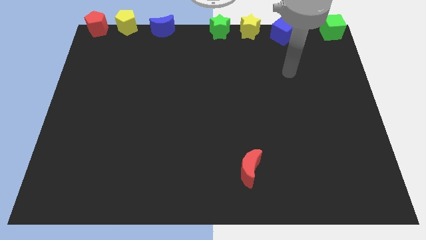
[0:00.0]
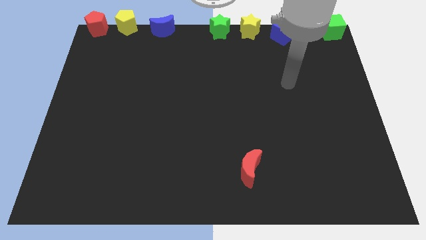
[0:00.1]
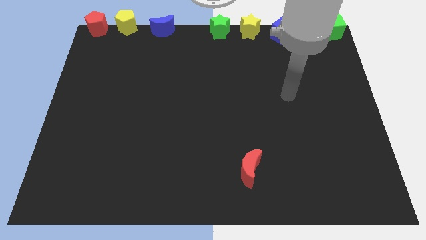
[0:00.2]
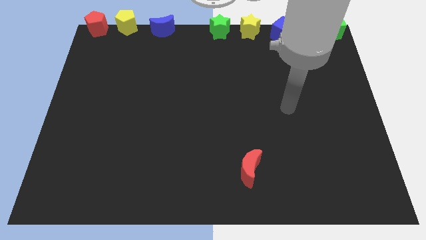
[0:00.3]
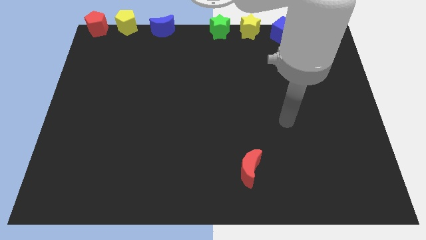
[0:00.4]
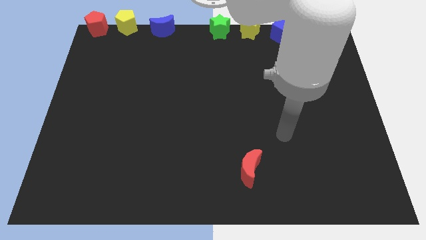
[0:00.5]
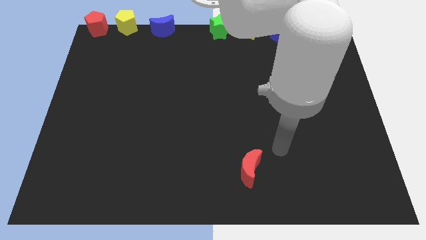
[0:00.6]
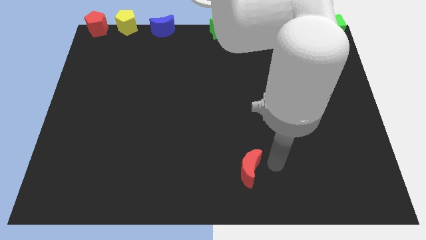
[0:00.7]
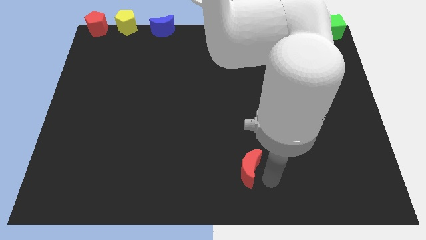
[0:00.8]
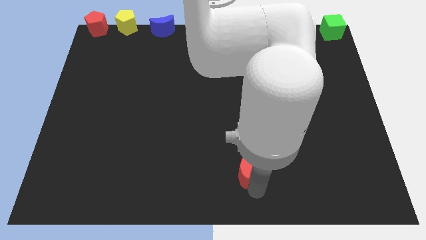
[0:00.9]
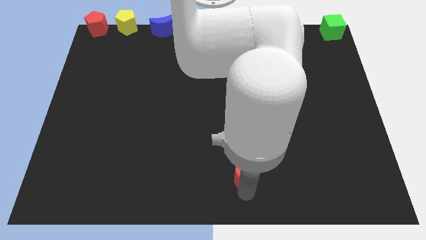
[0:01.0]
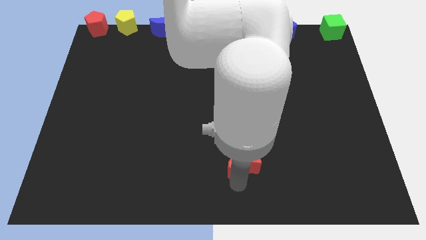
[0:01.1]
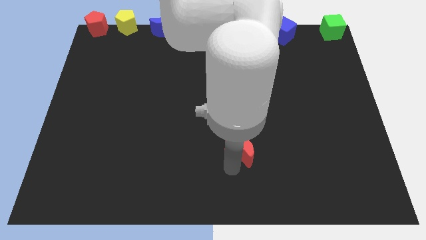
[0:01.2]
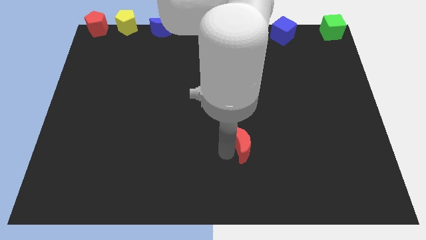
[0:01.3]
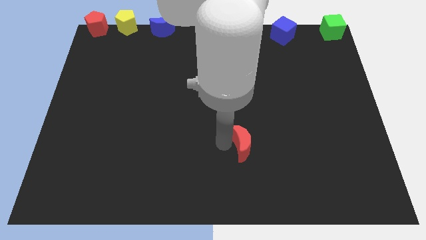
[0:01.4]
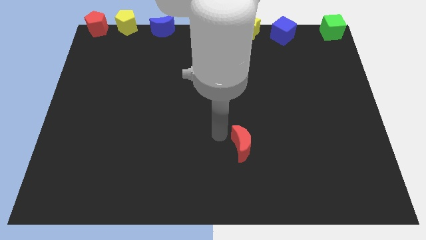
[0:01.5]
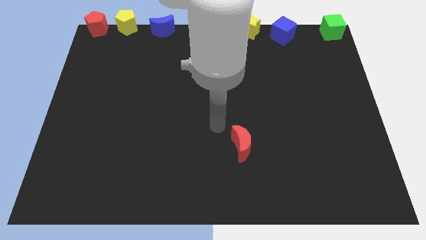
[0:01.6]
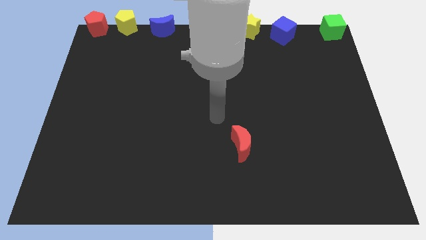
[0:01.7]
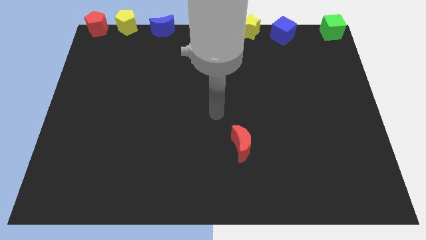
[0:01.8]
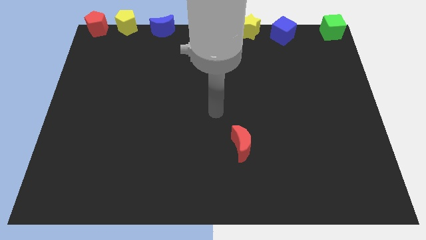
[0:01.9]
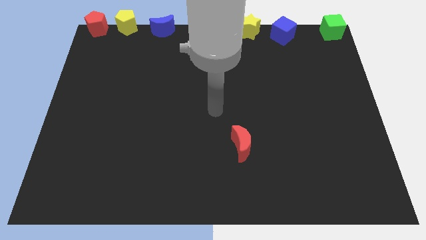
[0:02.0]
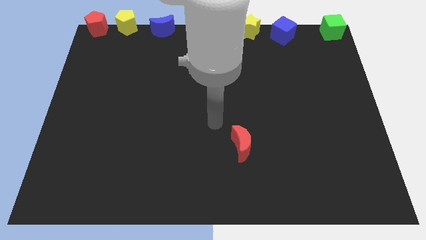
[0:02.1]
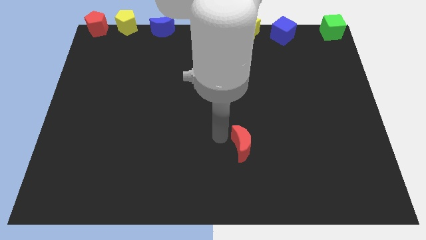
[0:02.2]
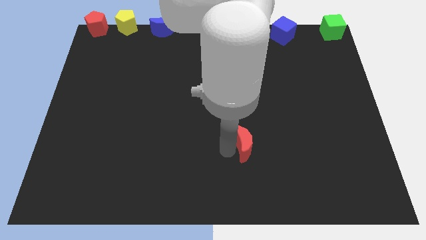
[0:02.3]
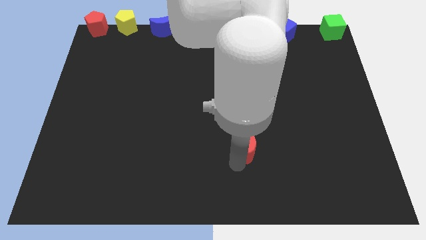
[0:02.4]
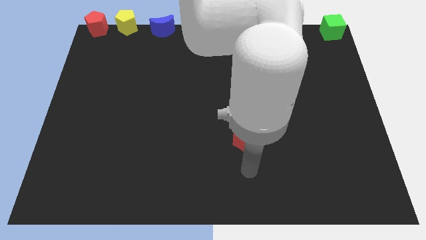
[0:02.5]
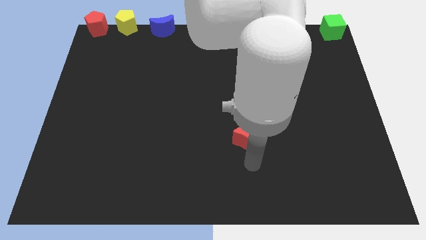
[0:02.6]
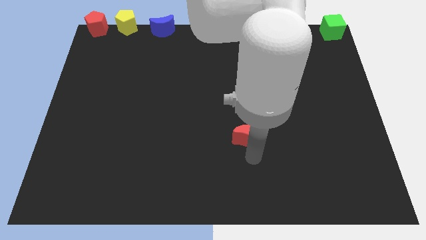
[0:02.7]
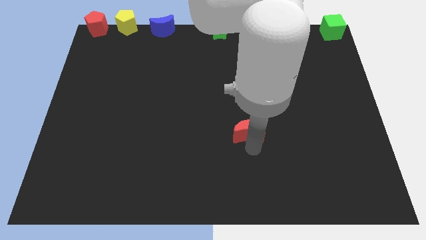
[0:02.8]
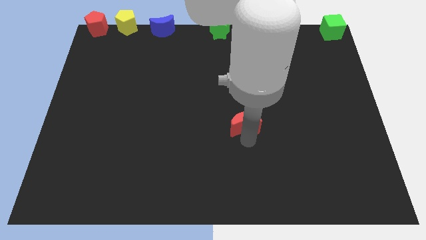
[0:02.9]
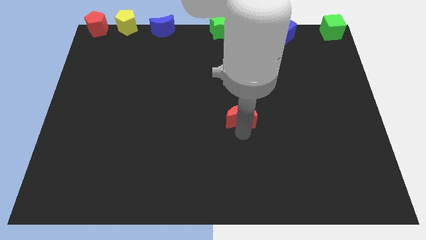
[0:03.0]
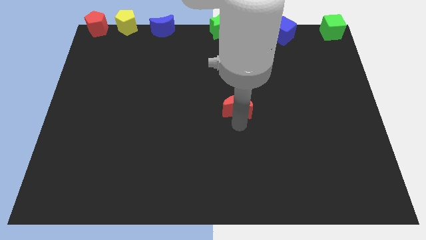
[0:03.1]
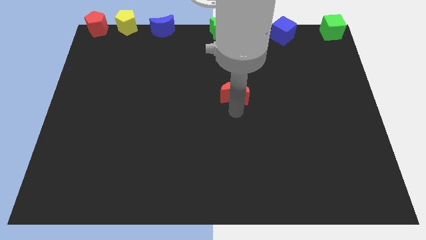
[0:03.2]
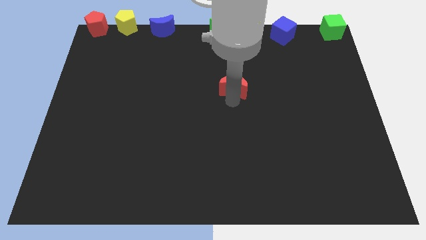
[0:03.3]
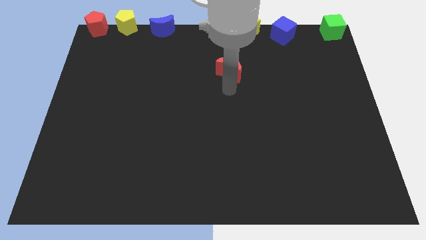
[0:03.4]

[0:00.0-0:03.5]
push red moon towards top of the board

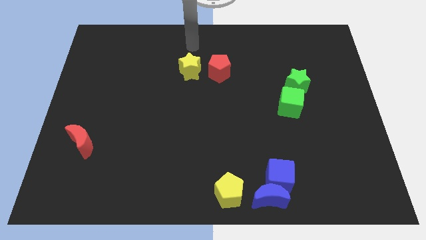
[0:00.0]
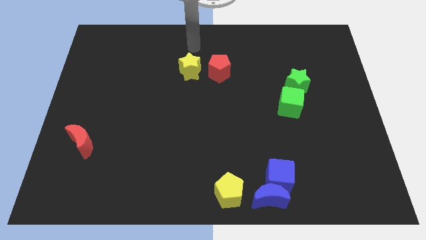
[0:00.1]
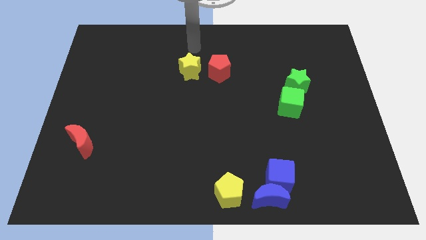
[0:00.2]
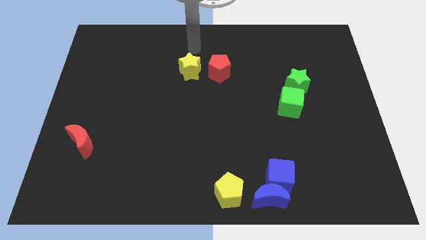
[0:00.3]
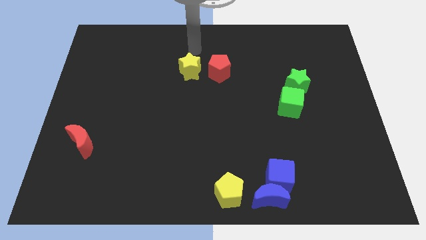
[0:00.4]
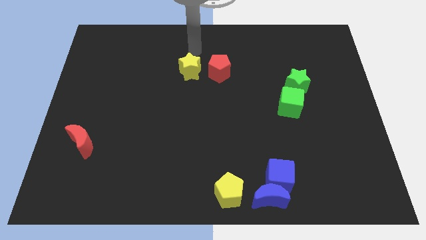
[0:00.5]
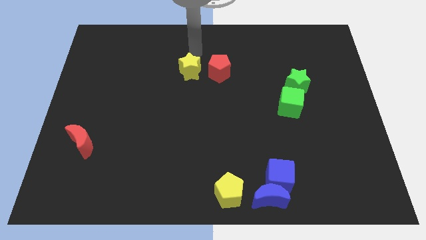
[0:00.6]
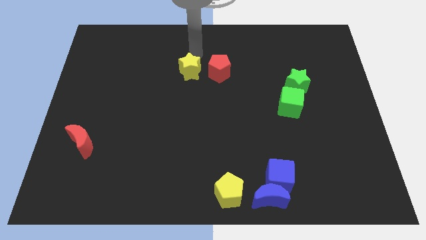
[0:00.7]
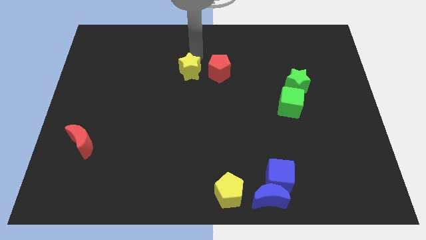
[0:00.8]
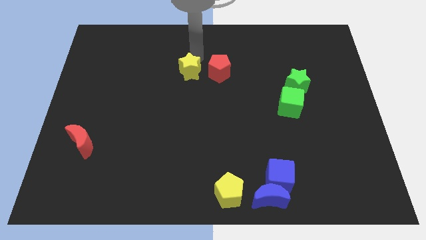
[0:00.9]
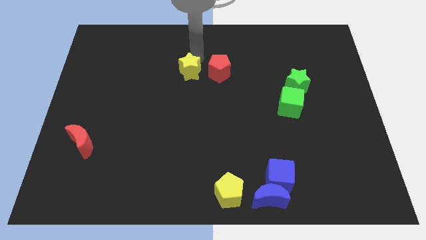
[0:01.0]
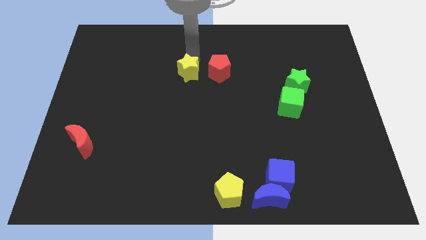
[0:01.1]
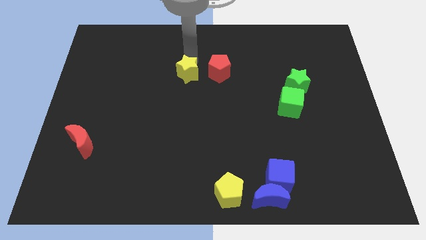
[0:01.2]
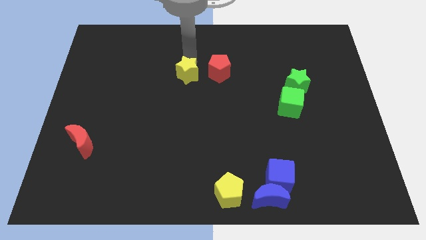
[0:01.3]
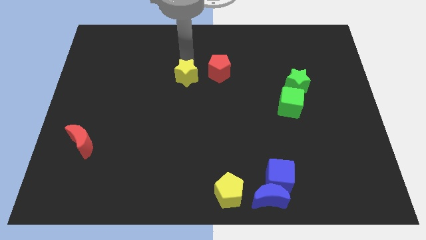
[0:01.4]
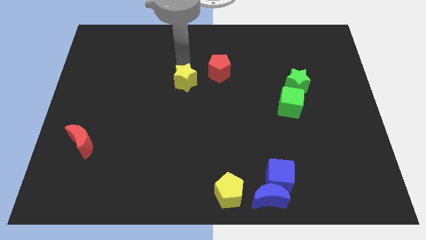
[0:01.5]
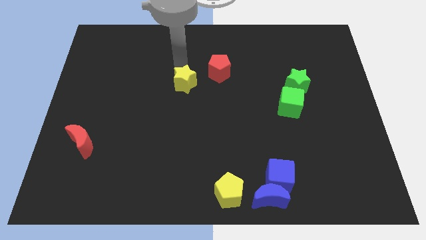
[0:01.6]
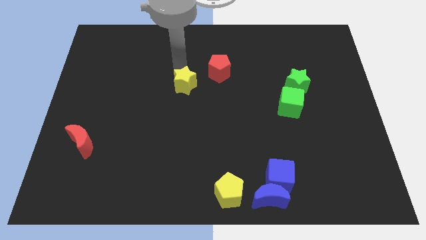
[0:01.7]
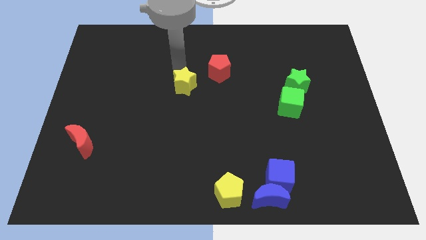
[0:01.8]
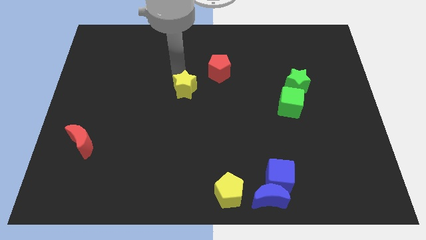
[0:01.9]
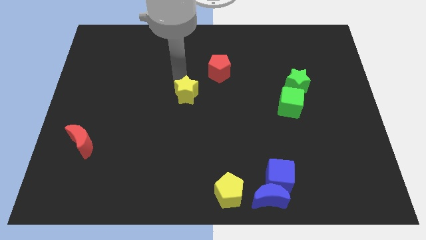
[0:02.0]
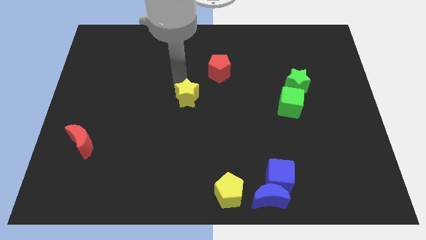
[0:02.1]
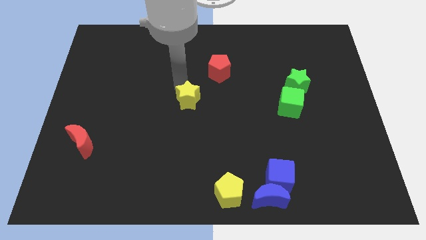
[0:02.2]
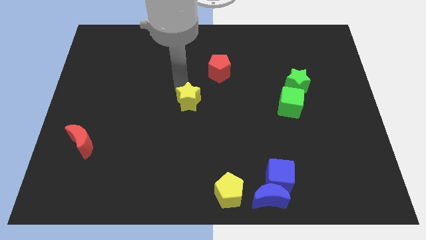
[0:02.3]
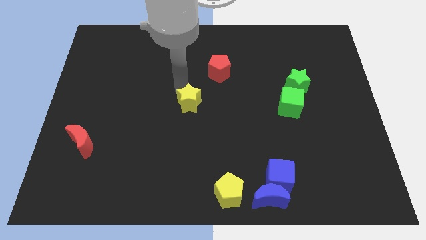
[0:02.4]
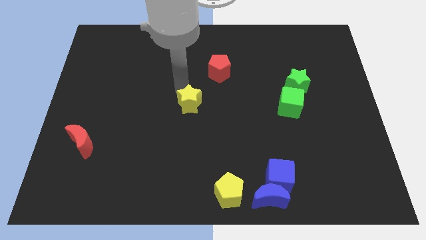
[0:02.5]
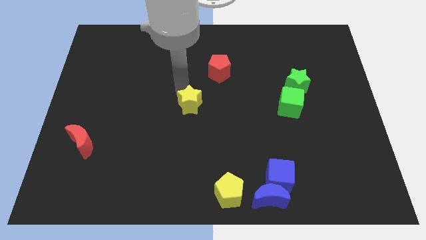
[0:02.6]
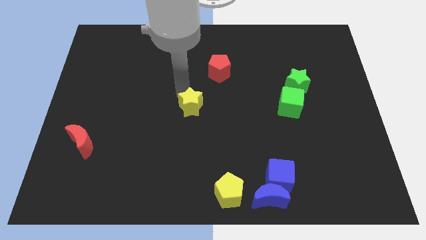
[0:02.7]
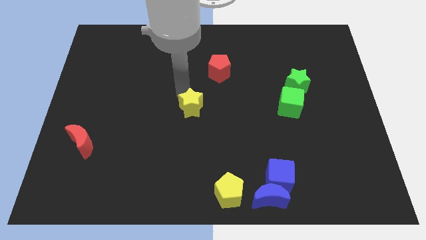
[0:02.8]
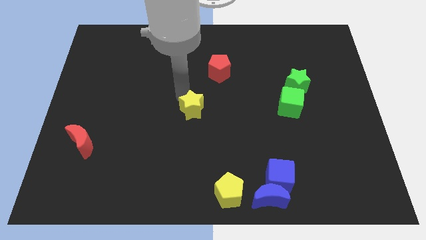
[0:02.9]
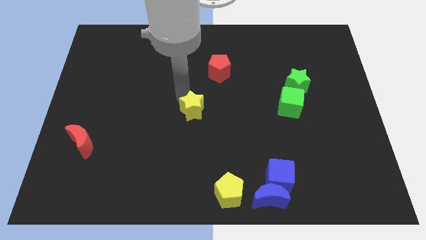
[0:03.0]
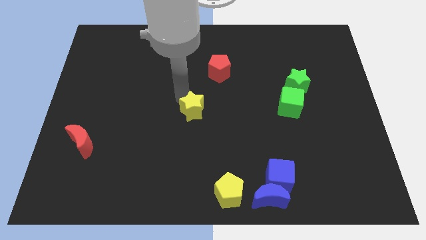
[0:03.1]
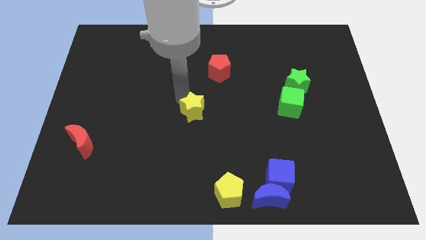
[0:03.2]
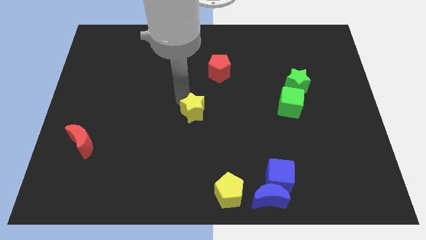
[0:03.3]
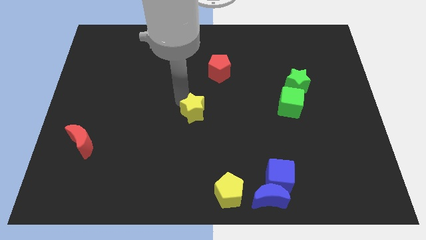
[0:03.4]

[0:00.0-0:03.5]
separate the yellow star from the red pentagon

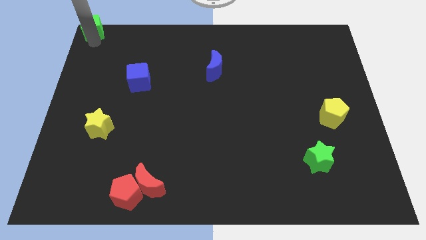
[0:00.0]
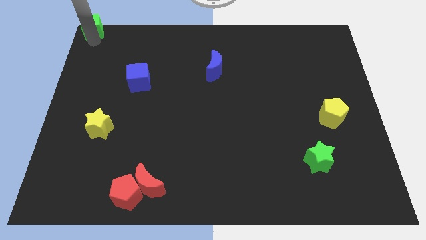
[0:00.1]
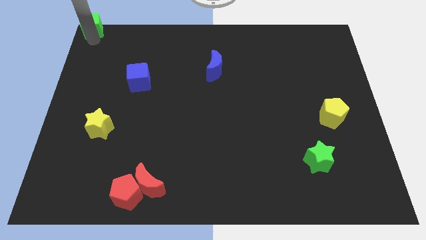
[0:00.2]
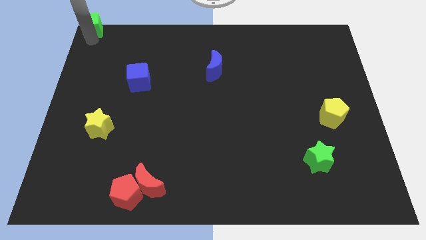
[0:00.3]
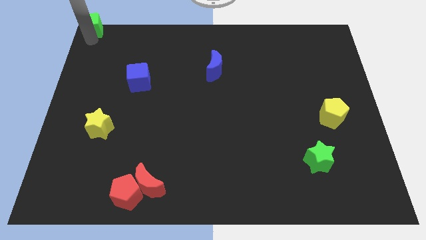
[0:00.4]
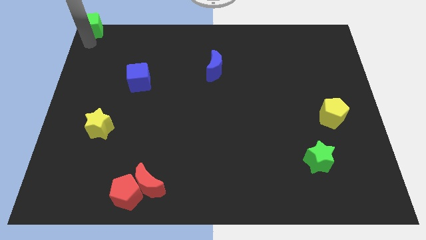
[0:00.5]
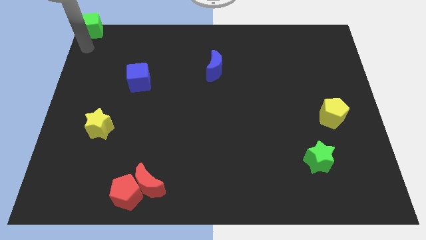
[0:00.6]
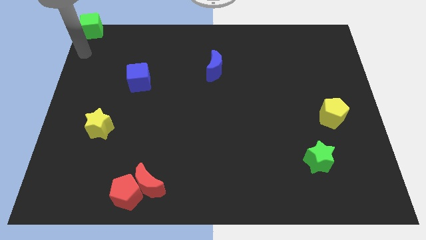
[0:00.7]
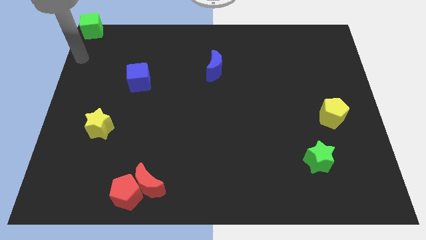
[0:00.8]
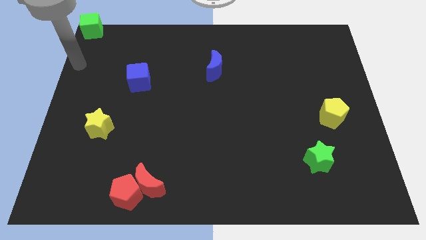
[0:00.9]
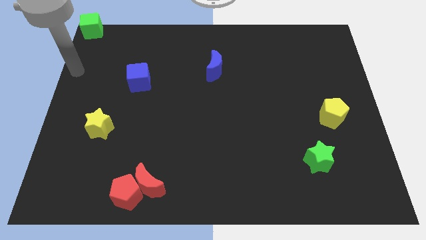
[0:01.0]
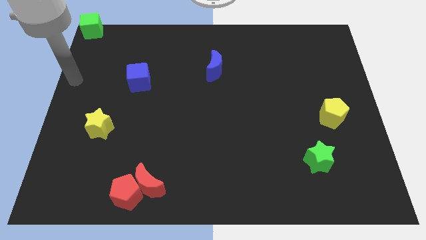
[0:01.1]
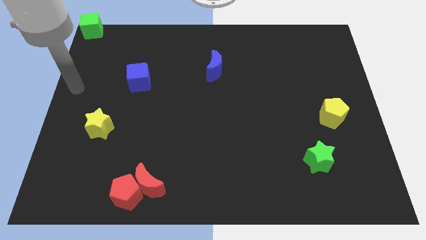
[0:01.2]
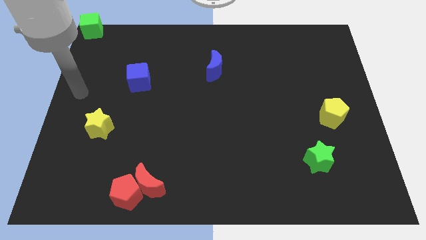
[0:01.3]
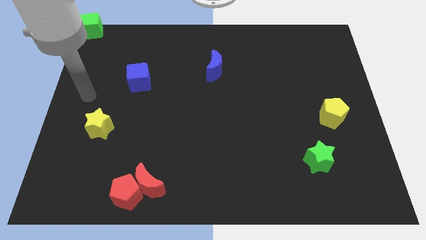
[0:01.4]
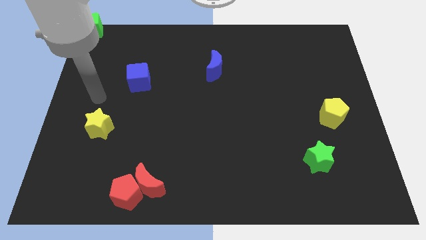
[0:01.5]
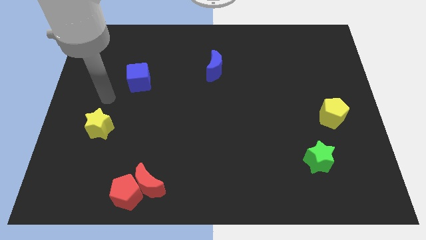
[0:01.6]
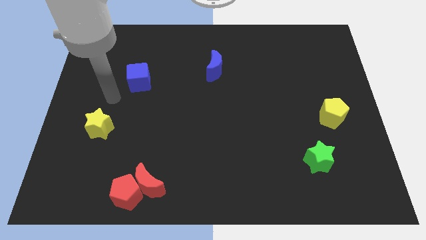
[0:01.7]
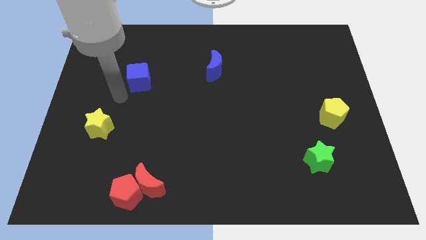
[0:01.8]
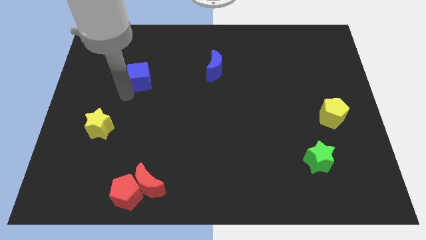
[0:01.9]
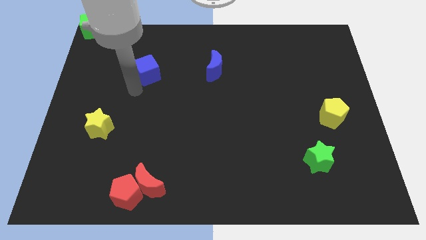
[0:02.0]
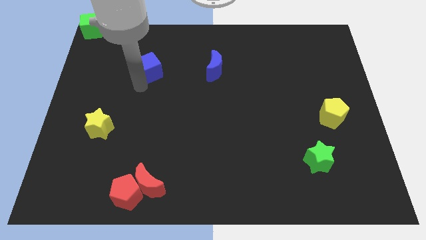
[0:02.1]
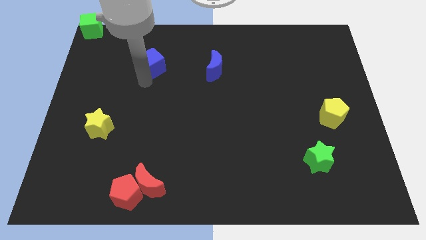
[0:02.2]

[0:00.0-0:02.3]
touch the bottom of blue cube
